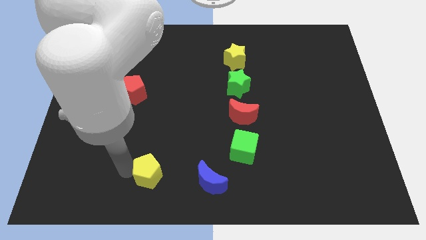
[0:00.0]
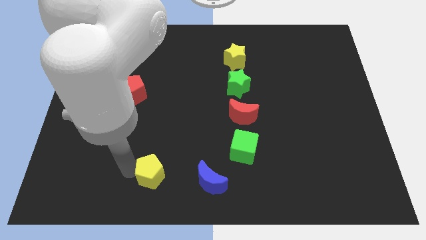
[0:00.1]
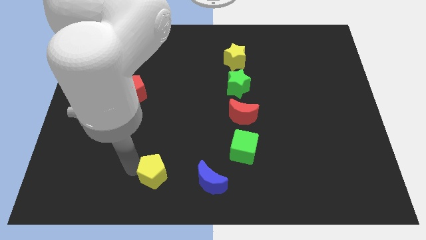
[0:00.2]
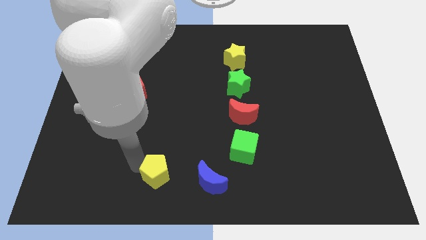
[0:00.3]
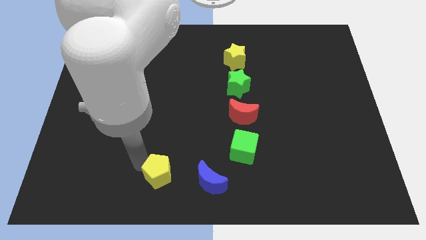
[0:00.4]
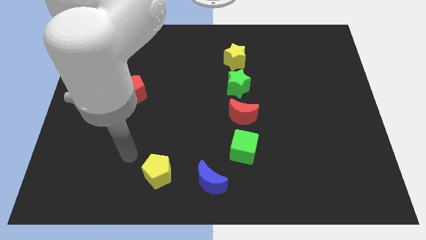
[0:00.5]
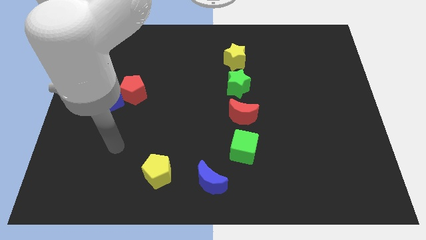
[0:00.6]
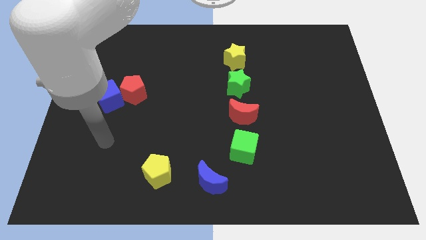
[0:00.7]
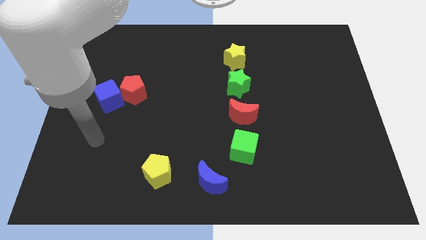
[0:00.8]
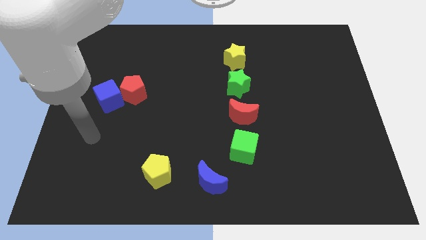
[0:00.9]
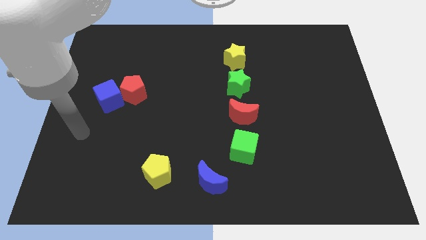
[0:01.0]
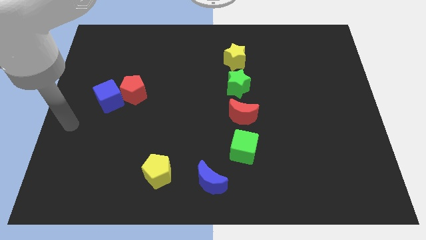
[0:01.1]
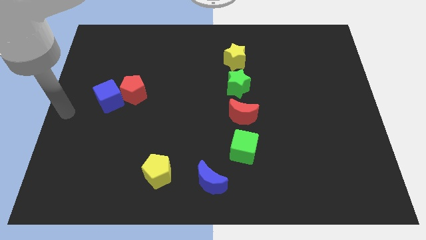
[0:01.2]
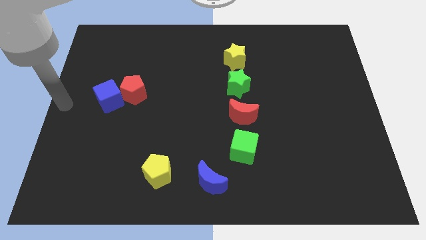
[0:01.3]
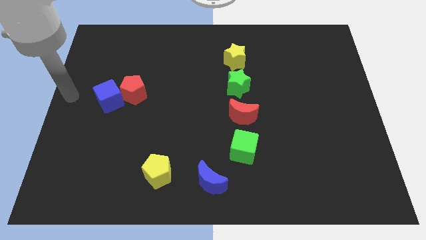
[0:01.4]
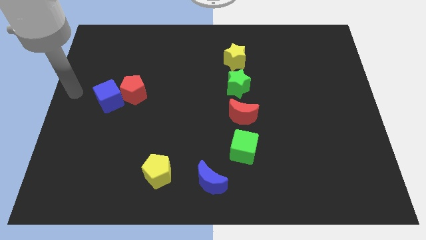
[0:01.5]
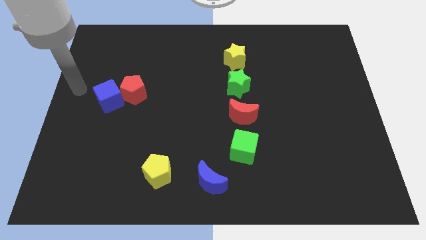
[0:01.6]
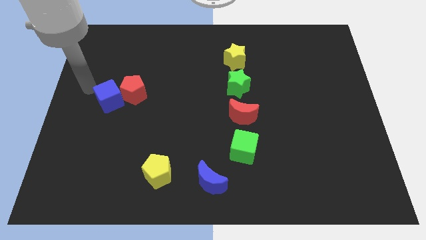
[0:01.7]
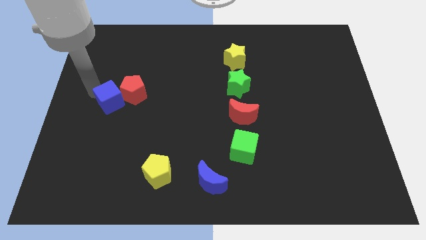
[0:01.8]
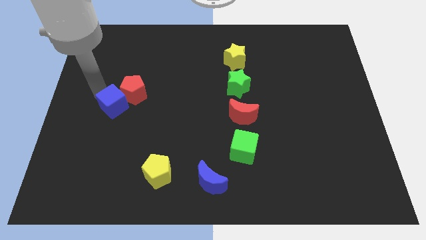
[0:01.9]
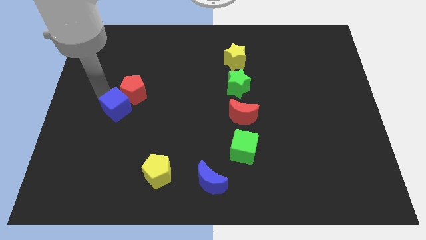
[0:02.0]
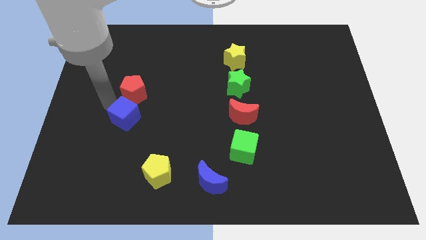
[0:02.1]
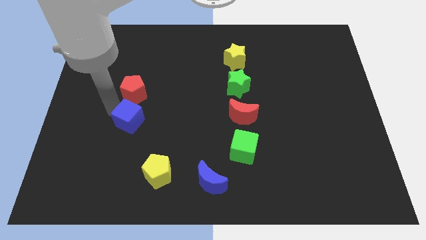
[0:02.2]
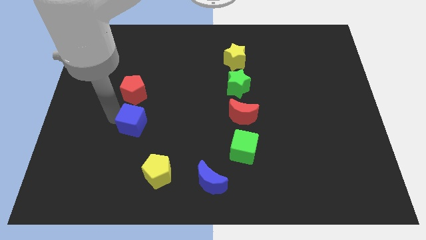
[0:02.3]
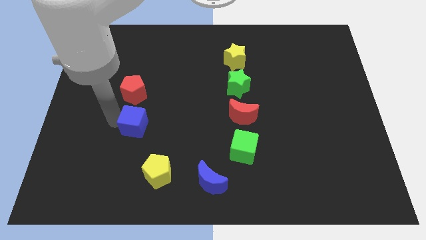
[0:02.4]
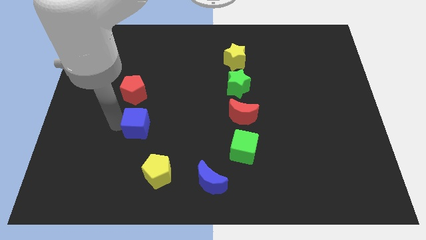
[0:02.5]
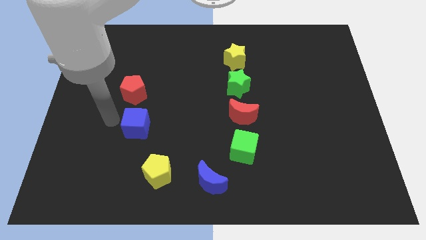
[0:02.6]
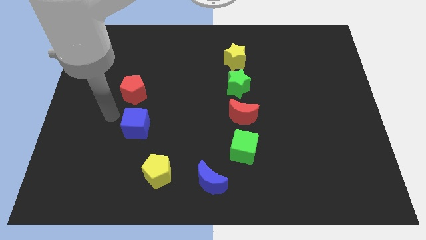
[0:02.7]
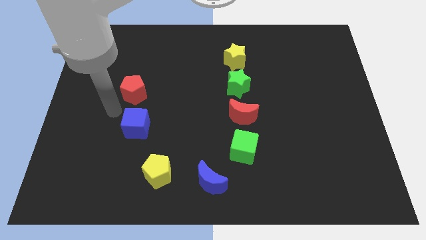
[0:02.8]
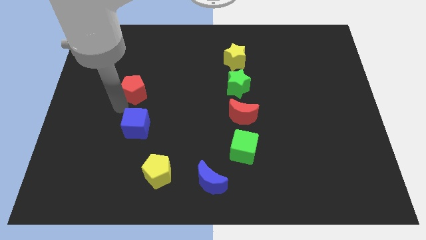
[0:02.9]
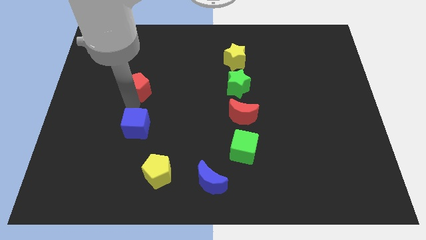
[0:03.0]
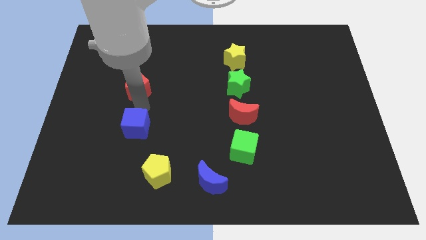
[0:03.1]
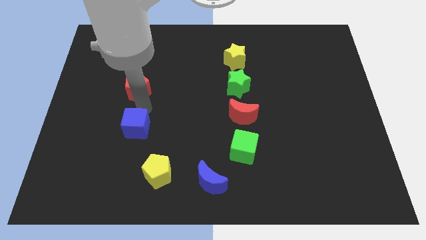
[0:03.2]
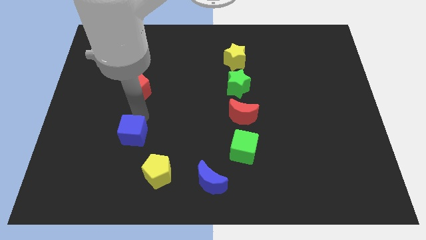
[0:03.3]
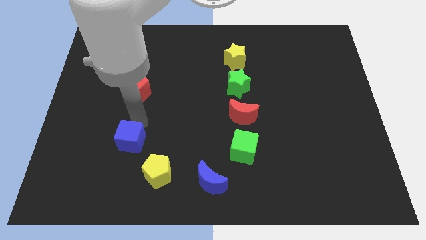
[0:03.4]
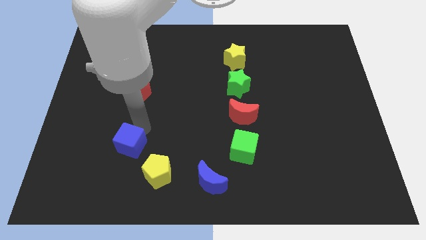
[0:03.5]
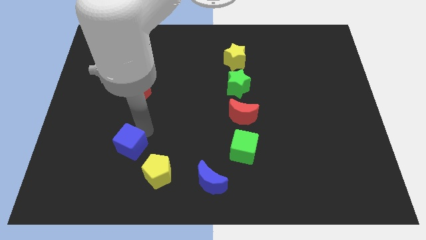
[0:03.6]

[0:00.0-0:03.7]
push the blue cube to the yellow pentagon

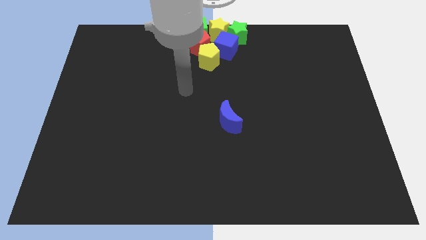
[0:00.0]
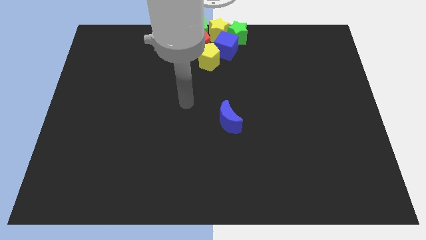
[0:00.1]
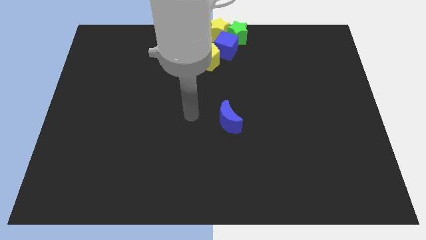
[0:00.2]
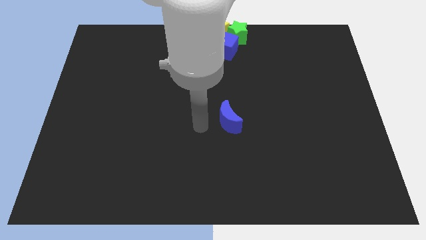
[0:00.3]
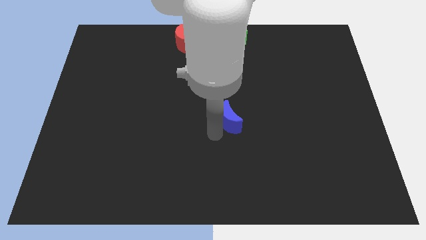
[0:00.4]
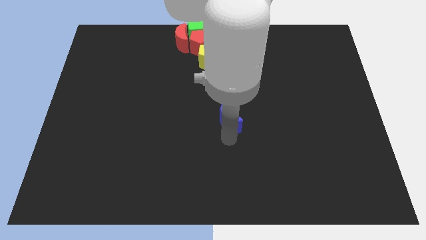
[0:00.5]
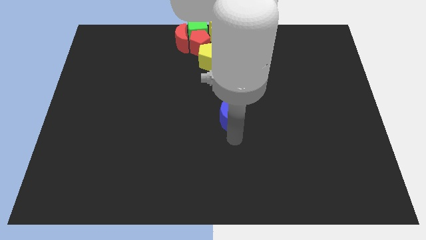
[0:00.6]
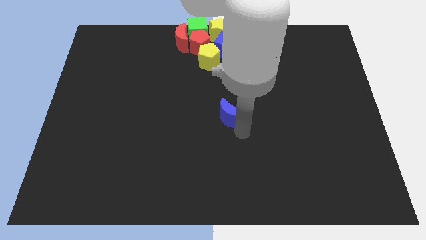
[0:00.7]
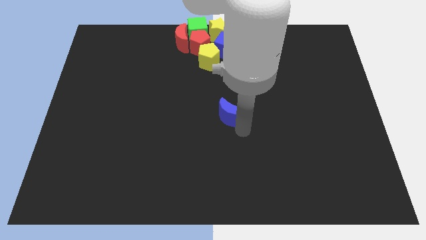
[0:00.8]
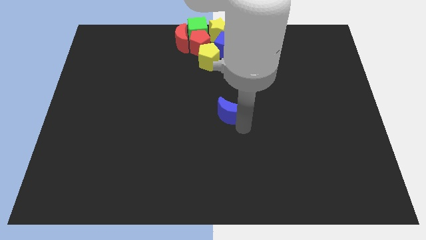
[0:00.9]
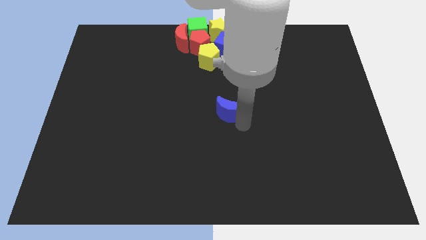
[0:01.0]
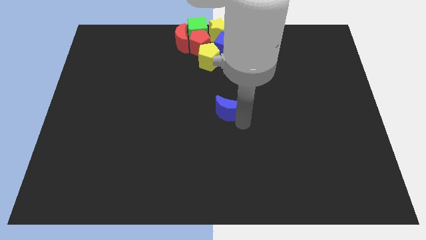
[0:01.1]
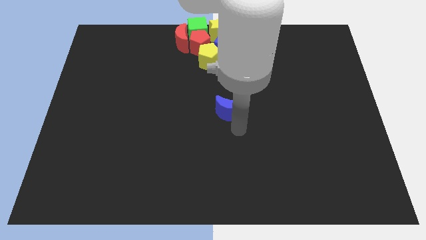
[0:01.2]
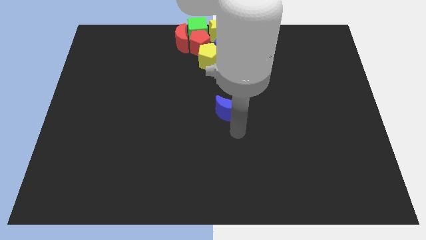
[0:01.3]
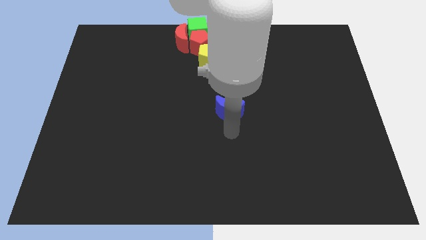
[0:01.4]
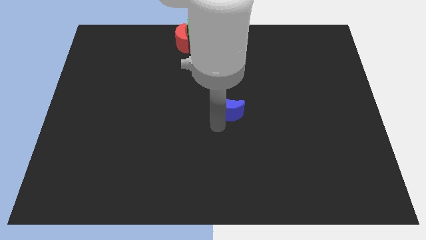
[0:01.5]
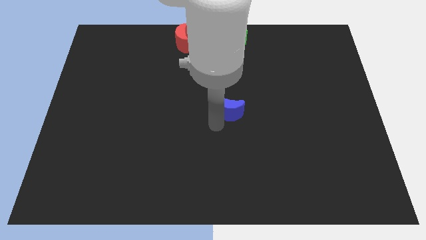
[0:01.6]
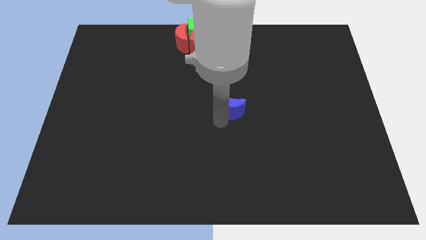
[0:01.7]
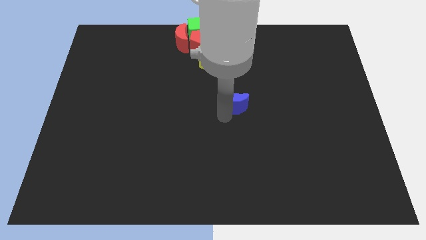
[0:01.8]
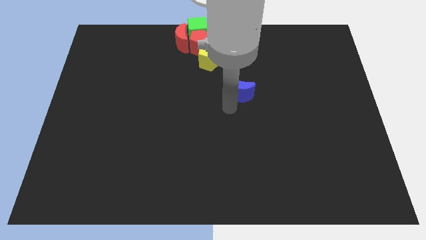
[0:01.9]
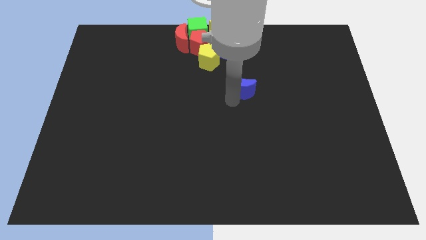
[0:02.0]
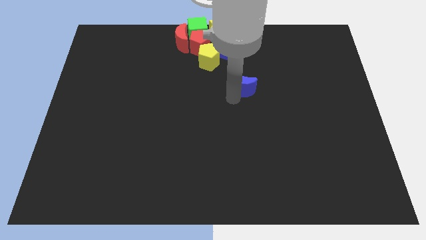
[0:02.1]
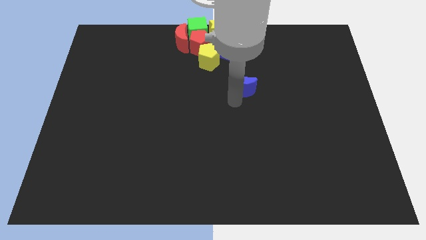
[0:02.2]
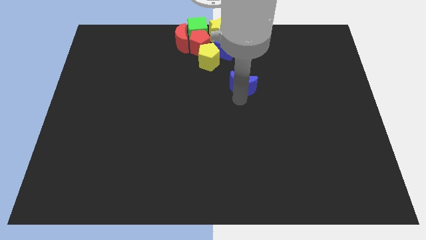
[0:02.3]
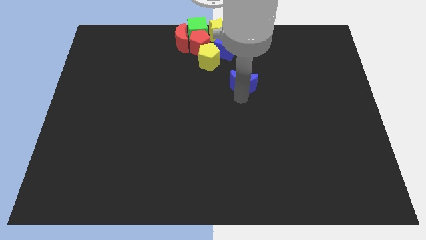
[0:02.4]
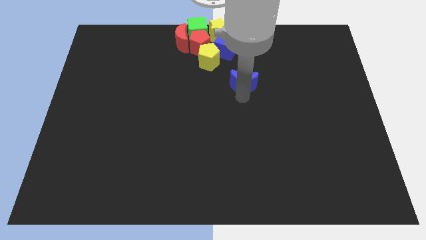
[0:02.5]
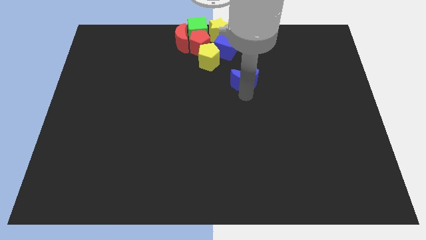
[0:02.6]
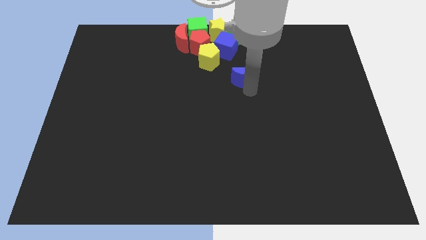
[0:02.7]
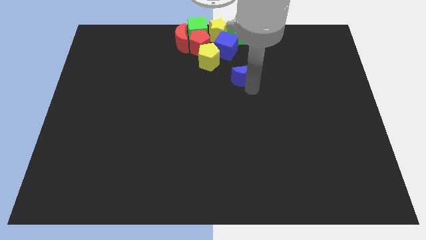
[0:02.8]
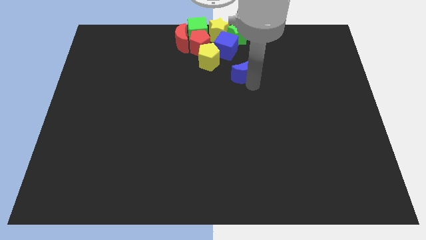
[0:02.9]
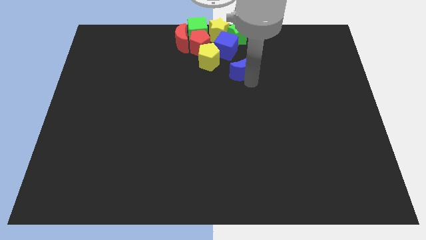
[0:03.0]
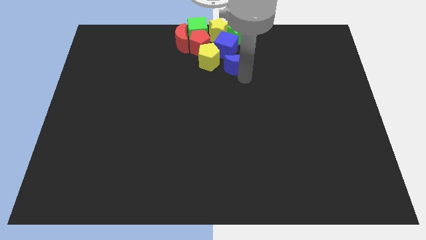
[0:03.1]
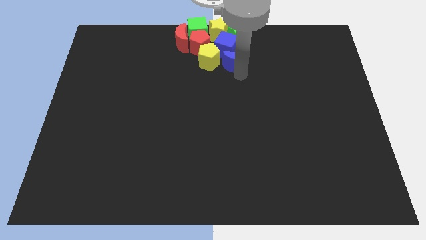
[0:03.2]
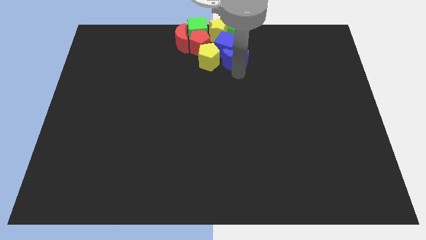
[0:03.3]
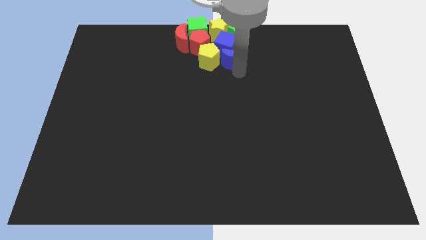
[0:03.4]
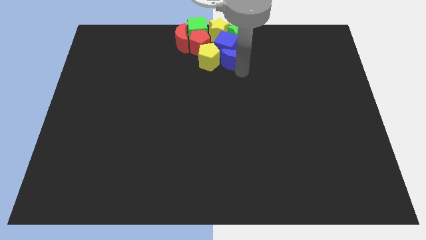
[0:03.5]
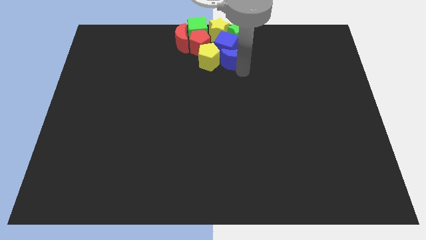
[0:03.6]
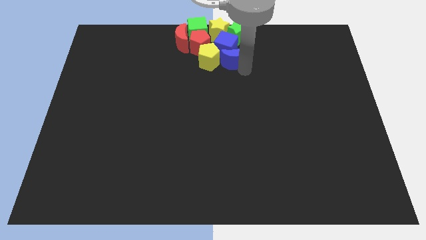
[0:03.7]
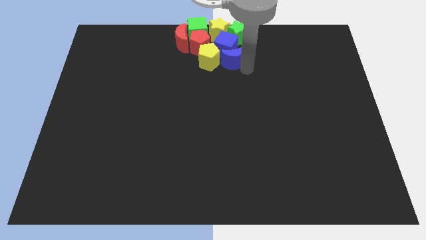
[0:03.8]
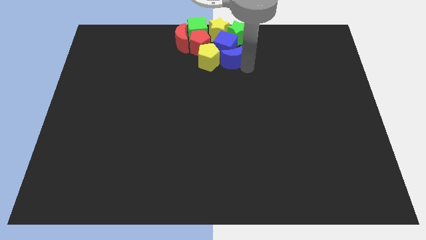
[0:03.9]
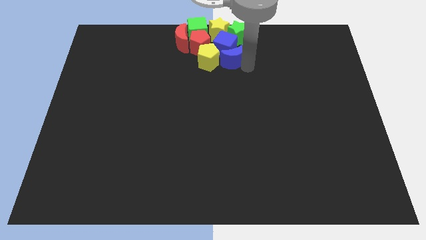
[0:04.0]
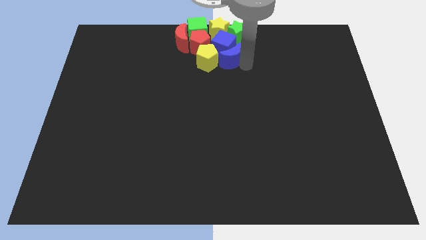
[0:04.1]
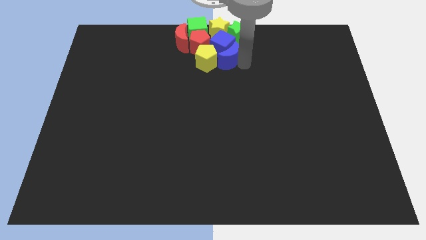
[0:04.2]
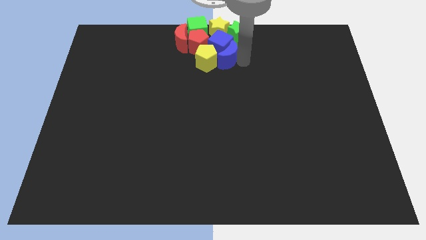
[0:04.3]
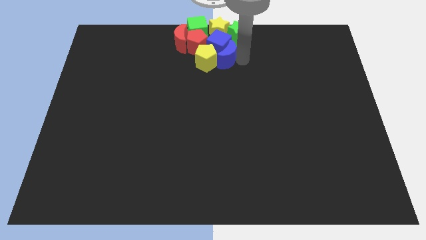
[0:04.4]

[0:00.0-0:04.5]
push the blue crescent to the top of the board

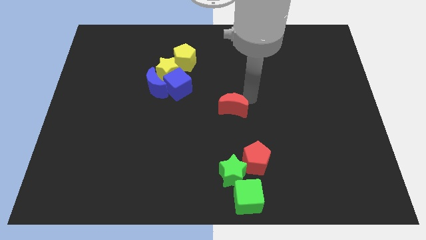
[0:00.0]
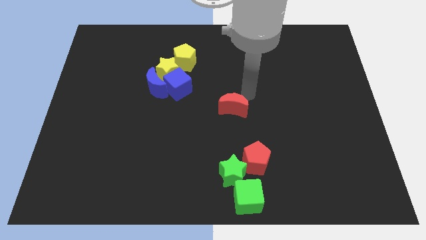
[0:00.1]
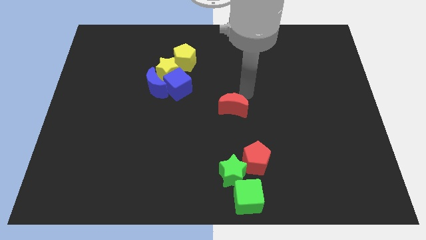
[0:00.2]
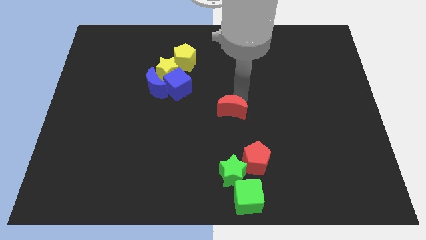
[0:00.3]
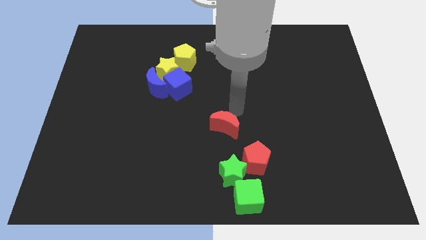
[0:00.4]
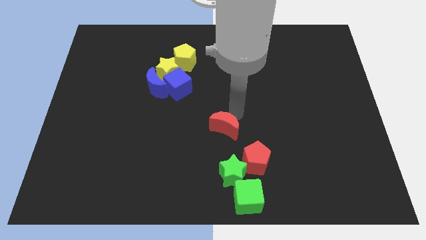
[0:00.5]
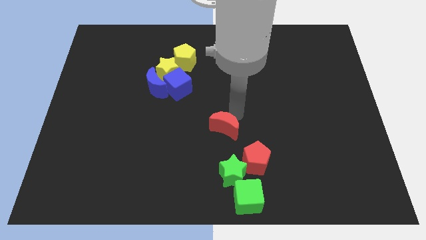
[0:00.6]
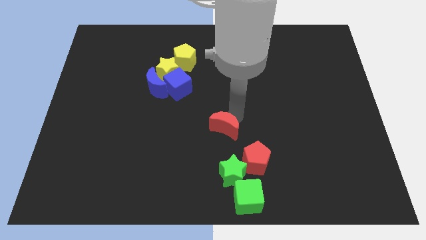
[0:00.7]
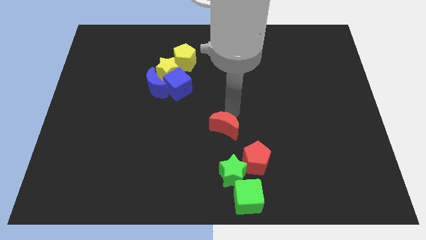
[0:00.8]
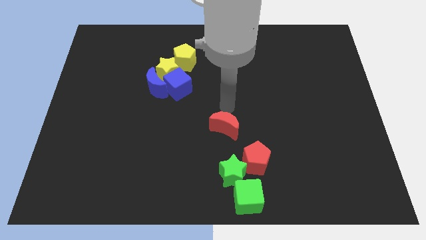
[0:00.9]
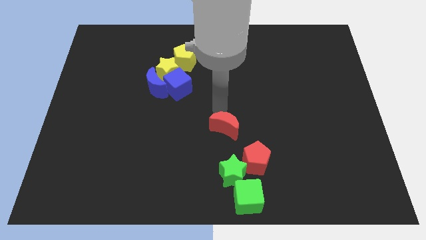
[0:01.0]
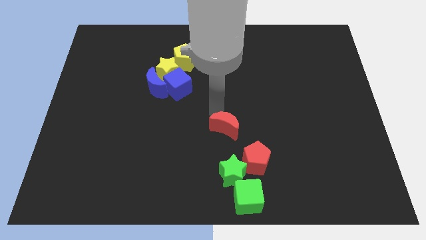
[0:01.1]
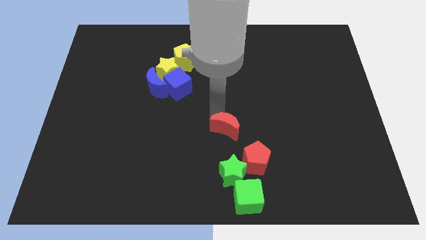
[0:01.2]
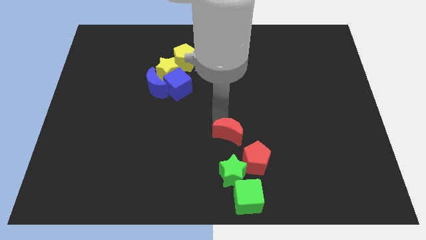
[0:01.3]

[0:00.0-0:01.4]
push the red crescent towards red pentagon
